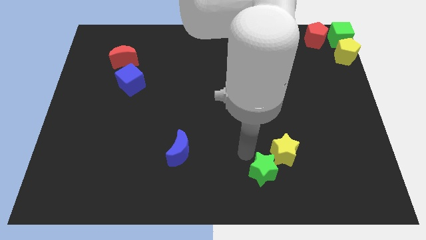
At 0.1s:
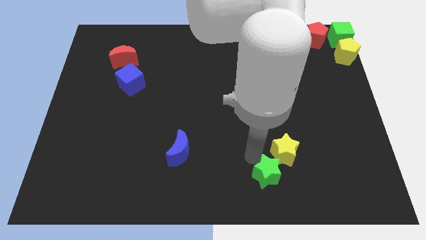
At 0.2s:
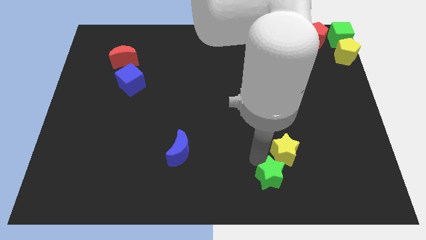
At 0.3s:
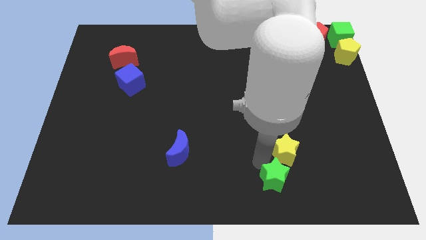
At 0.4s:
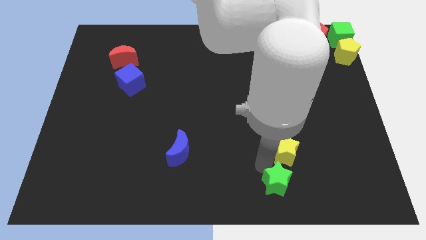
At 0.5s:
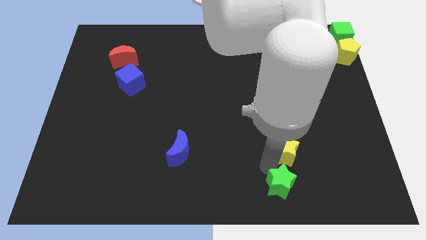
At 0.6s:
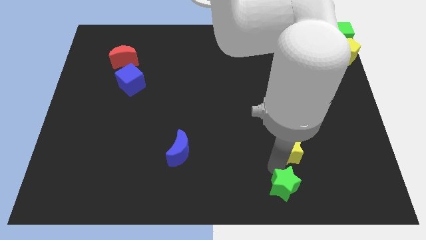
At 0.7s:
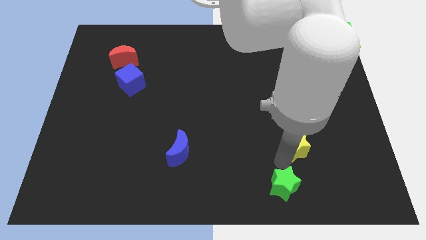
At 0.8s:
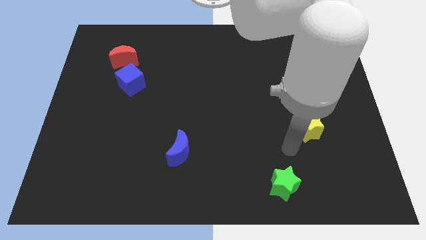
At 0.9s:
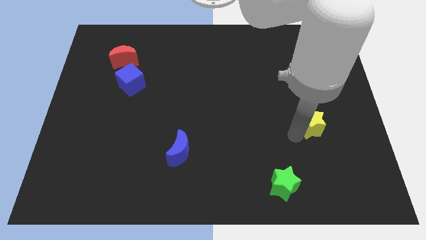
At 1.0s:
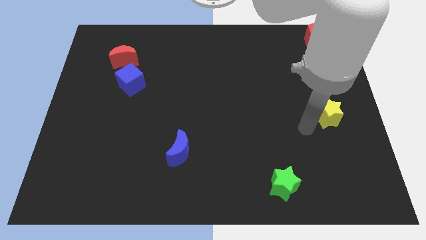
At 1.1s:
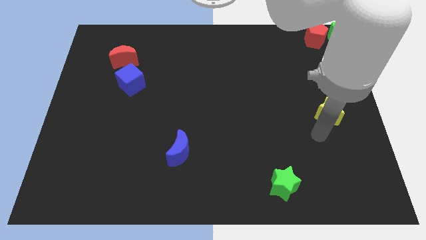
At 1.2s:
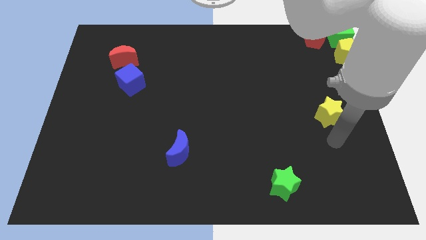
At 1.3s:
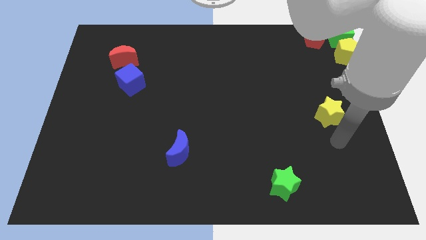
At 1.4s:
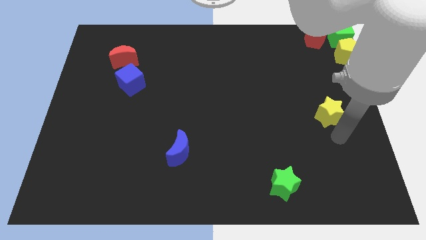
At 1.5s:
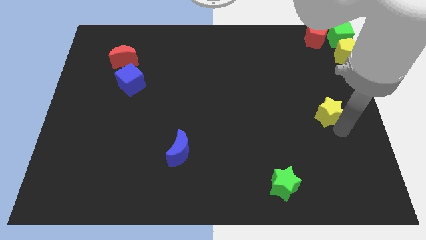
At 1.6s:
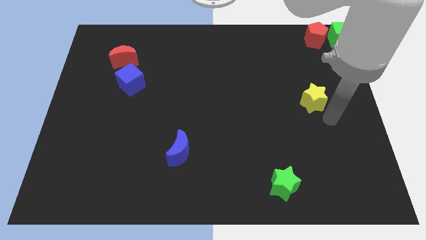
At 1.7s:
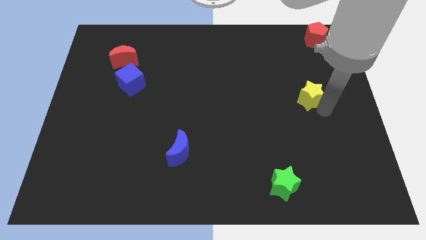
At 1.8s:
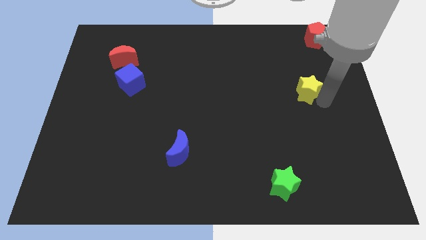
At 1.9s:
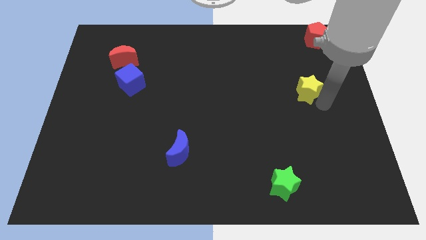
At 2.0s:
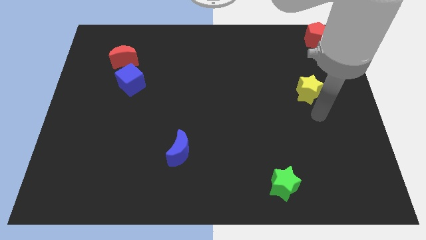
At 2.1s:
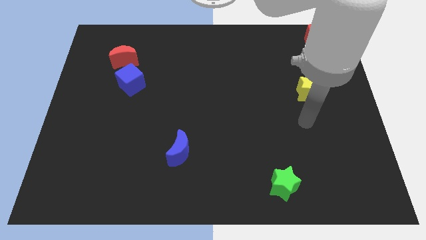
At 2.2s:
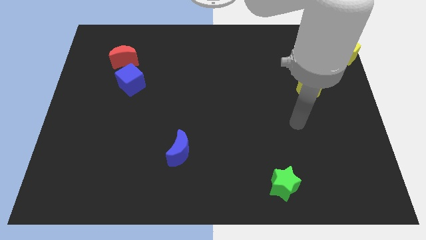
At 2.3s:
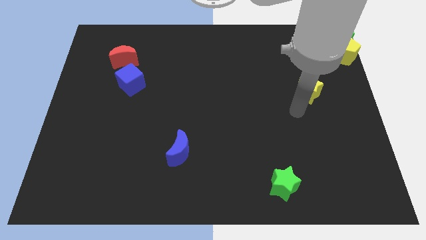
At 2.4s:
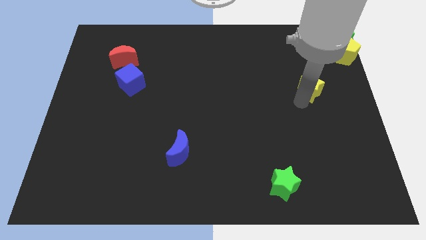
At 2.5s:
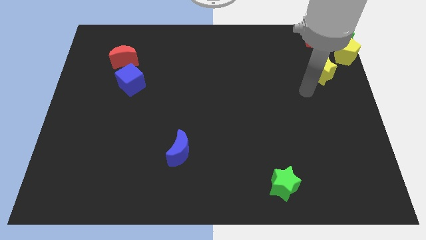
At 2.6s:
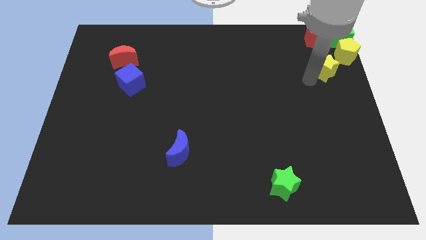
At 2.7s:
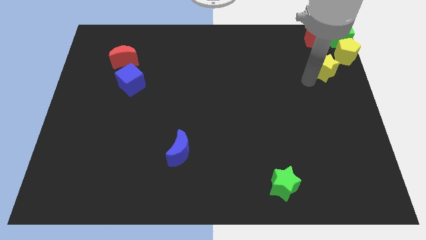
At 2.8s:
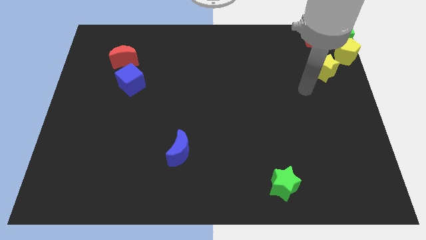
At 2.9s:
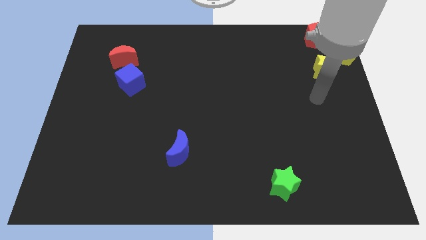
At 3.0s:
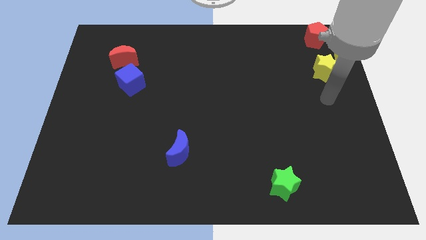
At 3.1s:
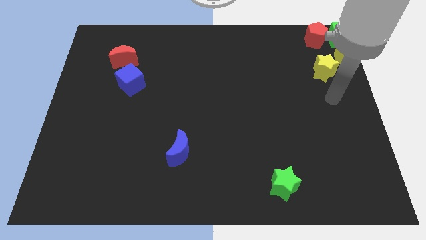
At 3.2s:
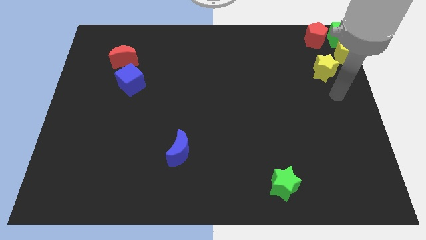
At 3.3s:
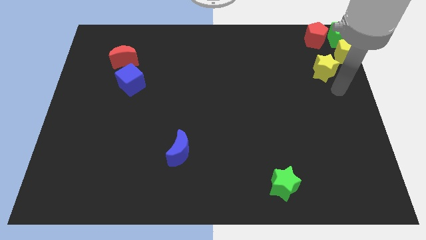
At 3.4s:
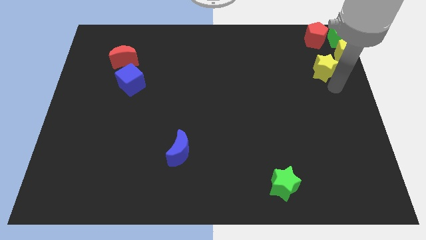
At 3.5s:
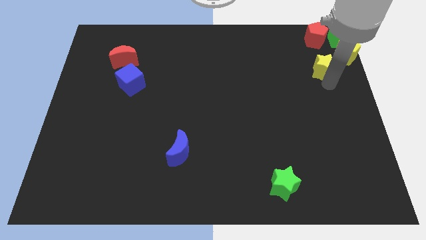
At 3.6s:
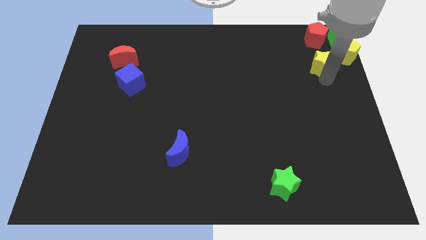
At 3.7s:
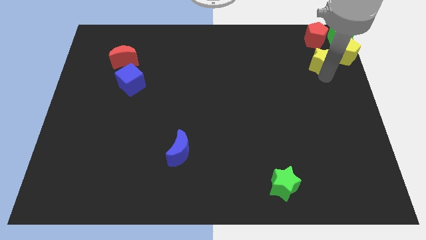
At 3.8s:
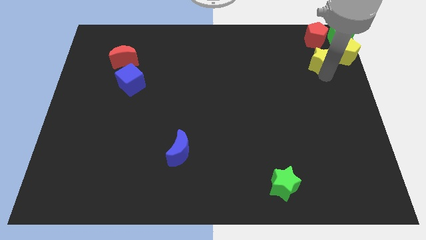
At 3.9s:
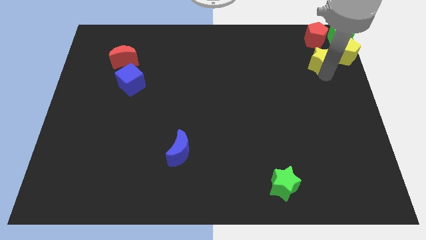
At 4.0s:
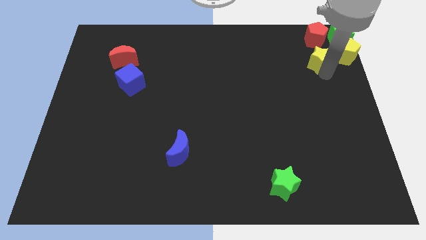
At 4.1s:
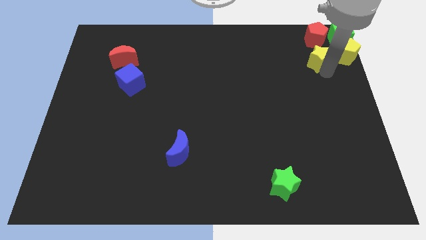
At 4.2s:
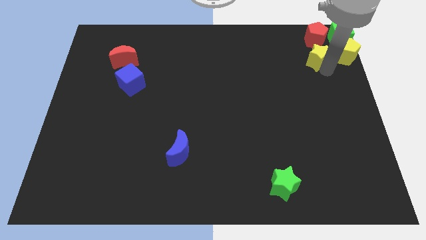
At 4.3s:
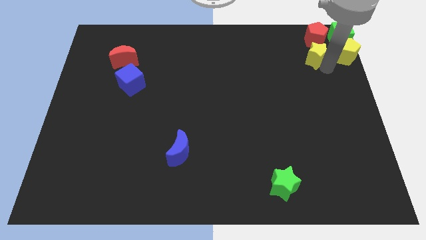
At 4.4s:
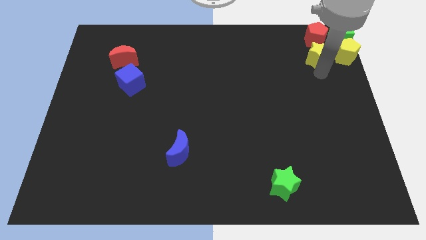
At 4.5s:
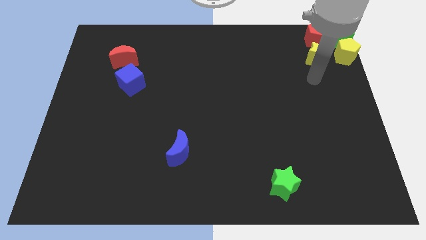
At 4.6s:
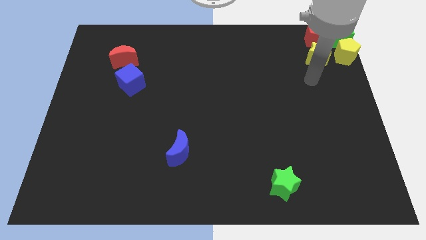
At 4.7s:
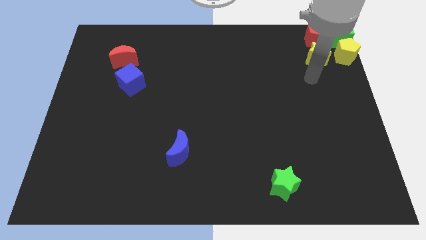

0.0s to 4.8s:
place the yellow star below the red pentagon

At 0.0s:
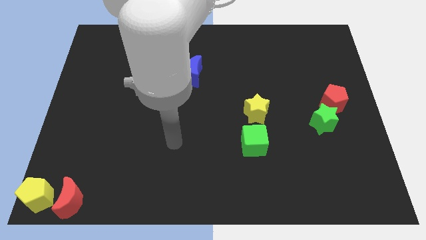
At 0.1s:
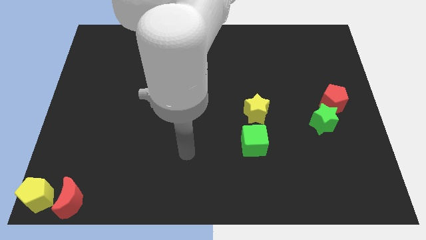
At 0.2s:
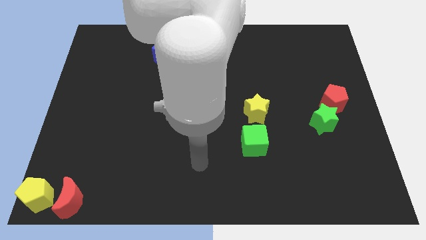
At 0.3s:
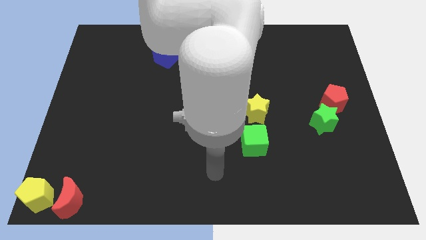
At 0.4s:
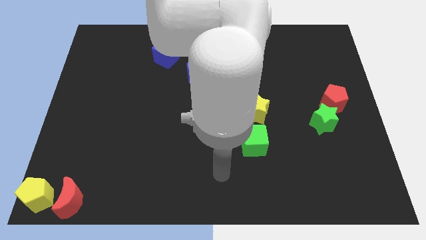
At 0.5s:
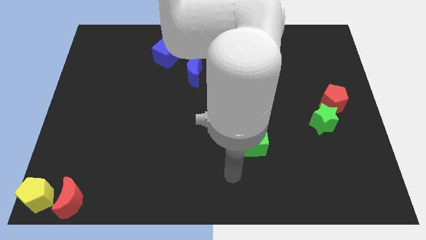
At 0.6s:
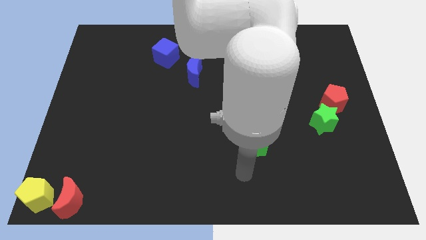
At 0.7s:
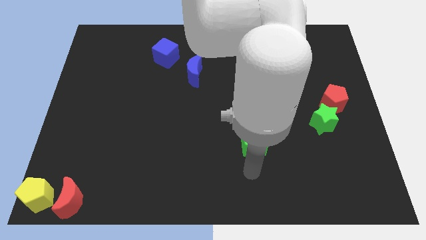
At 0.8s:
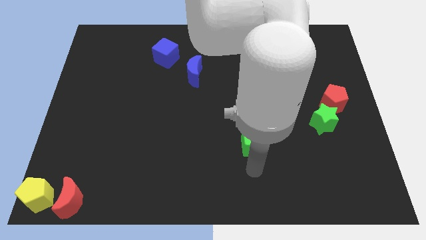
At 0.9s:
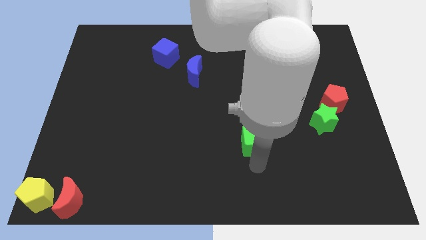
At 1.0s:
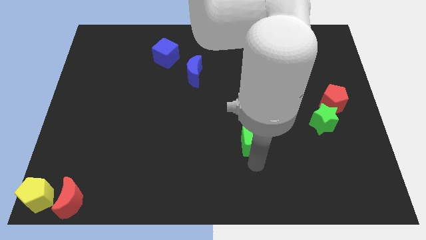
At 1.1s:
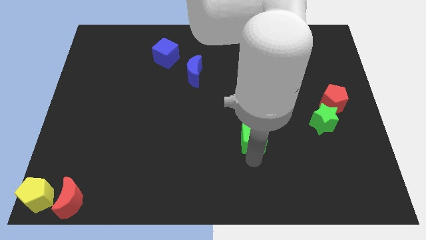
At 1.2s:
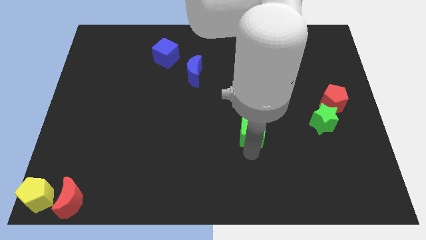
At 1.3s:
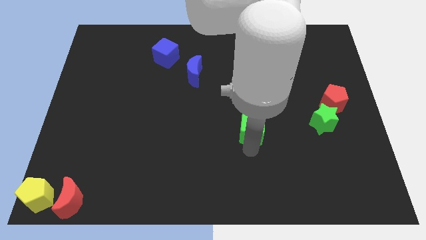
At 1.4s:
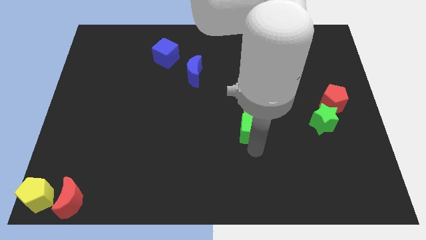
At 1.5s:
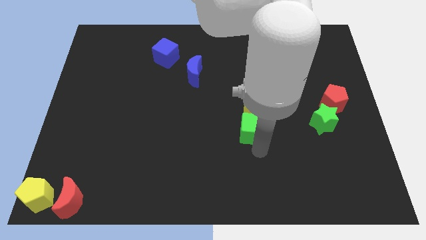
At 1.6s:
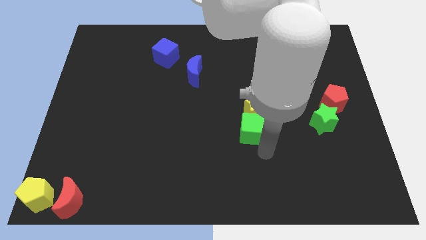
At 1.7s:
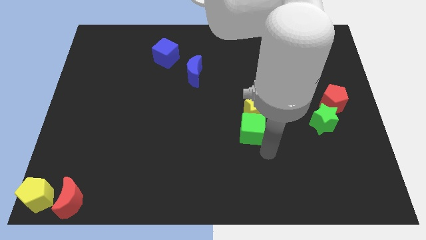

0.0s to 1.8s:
push the green cube slightly up

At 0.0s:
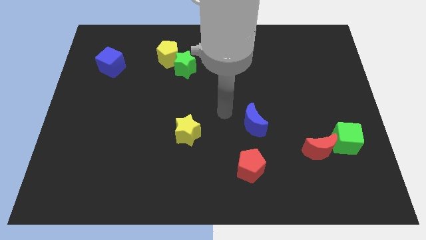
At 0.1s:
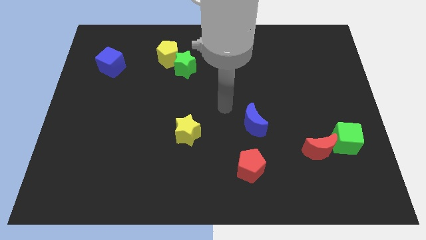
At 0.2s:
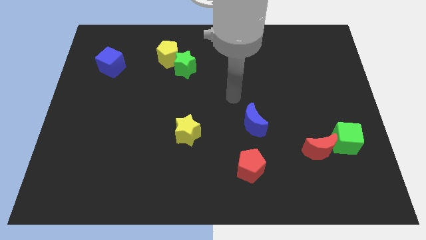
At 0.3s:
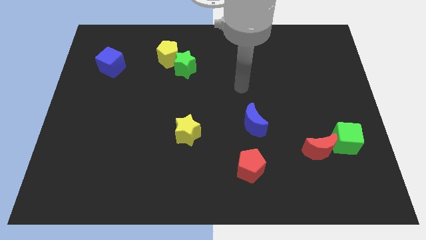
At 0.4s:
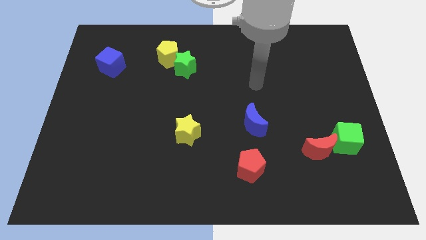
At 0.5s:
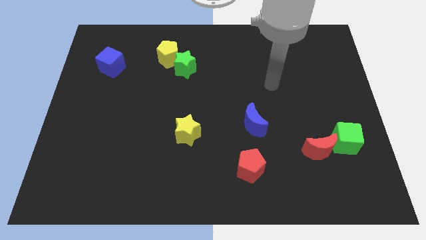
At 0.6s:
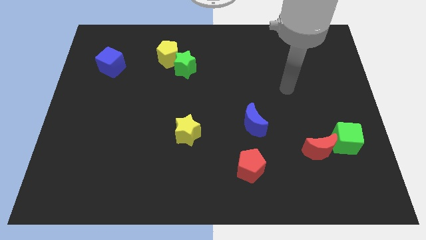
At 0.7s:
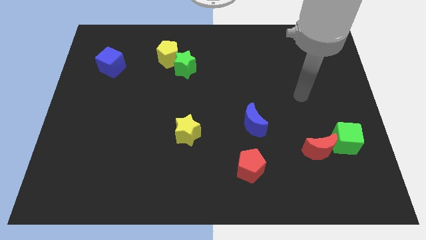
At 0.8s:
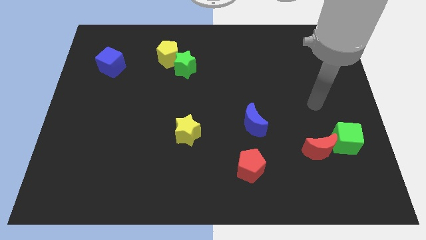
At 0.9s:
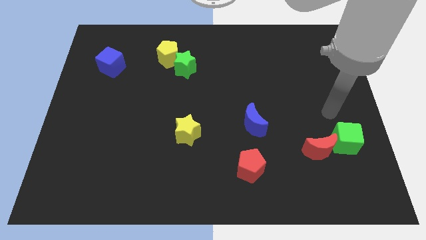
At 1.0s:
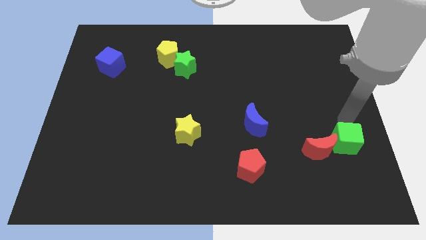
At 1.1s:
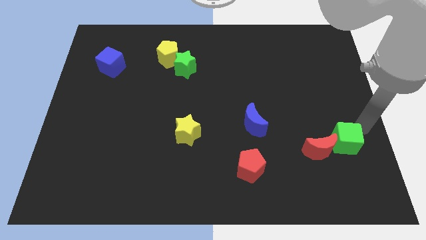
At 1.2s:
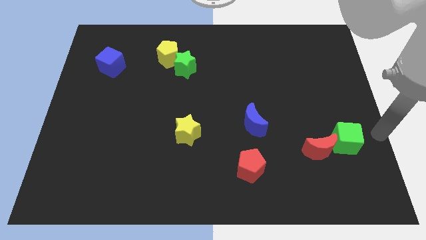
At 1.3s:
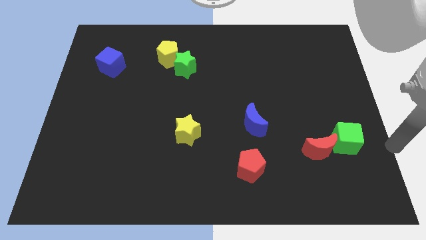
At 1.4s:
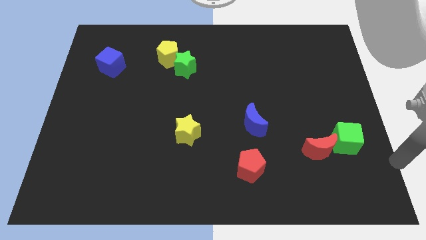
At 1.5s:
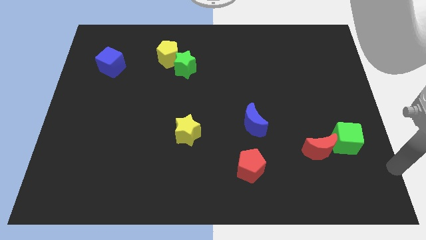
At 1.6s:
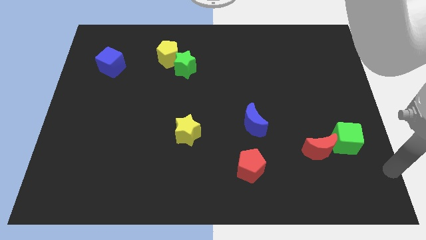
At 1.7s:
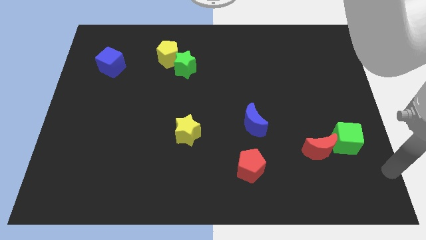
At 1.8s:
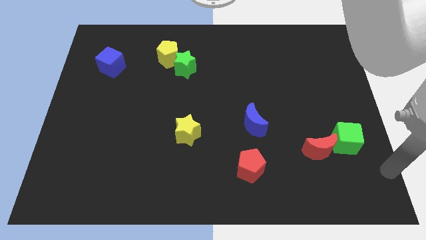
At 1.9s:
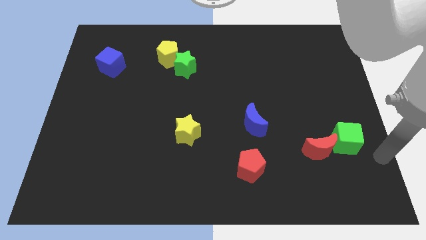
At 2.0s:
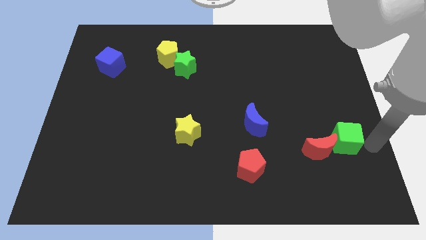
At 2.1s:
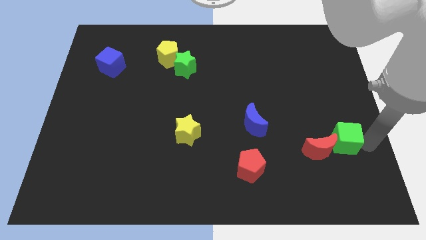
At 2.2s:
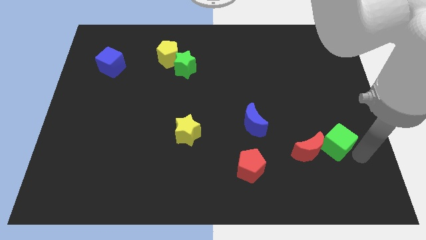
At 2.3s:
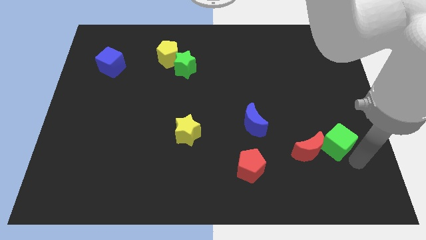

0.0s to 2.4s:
slightly move the green cube to the right of the red crescent

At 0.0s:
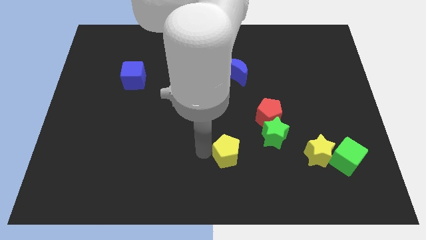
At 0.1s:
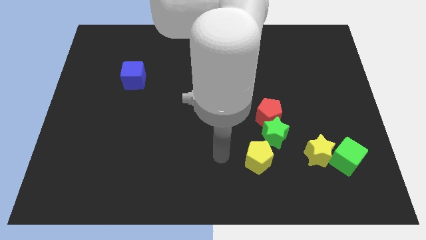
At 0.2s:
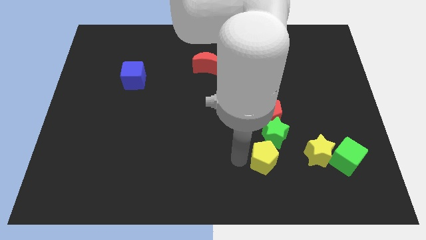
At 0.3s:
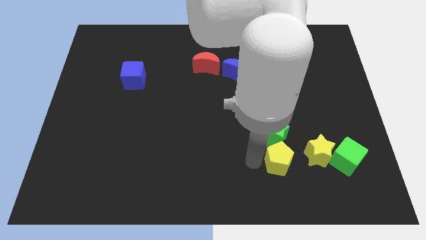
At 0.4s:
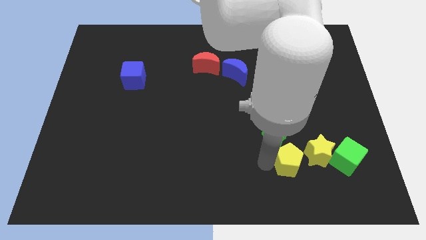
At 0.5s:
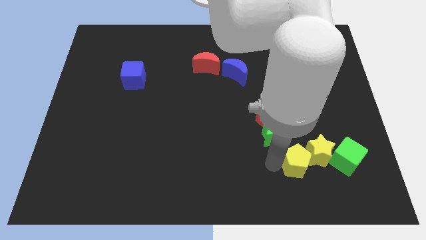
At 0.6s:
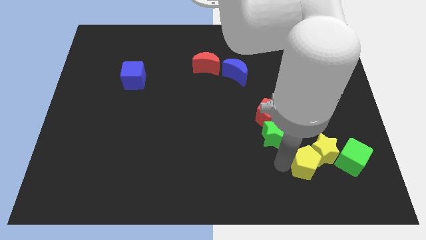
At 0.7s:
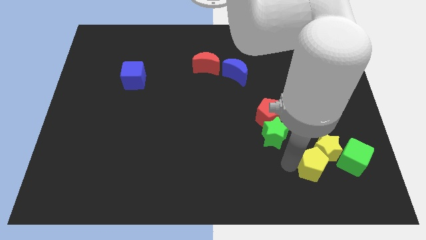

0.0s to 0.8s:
push the yellow pentagon into the yellow star
